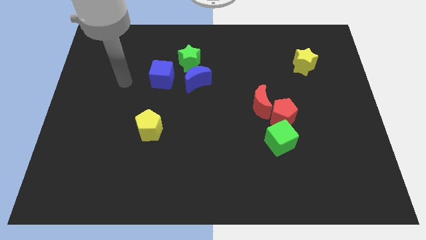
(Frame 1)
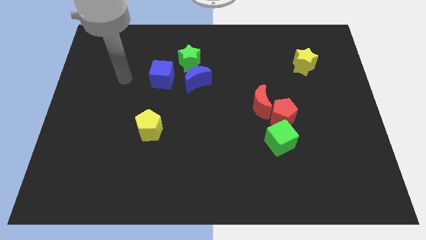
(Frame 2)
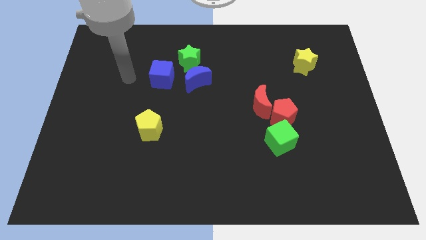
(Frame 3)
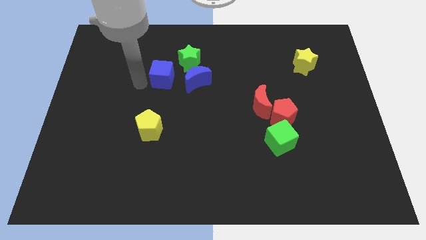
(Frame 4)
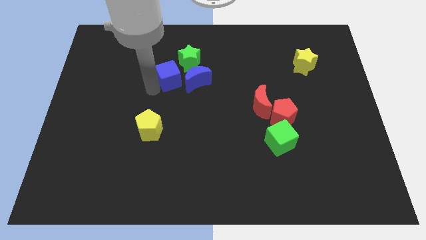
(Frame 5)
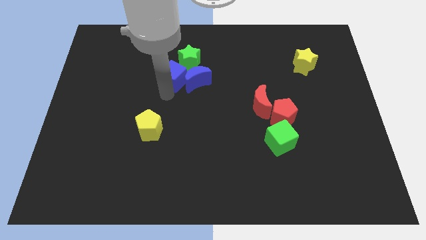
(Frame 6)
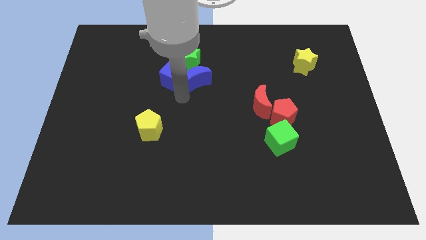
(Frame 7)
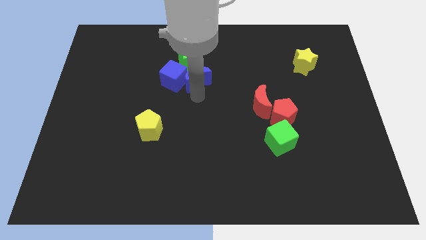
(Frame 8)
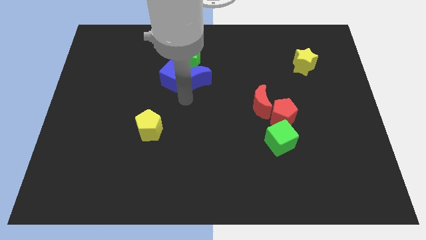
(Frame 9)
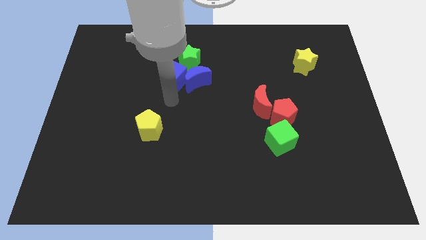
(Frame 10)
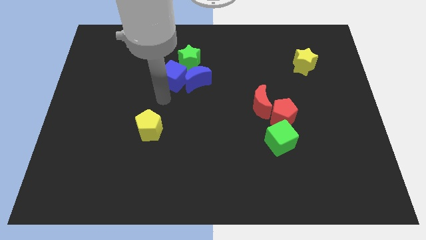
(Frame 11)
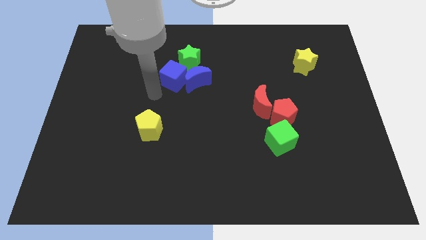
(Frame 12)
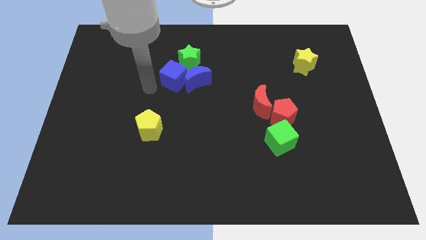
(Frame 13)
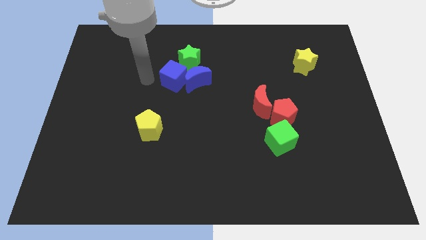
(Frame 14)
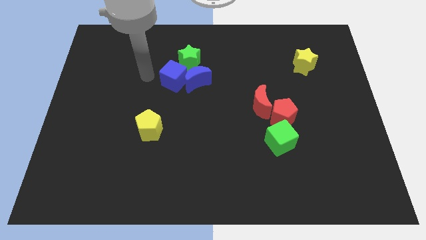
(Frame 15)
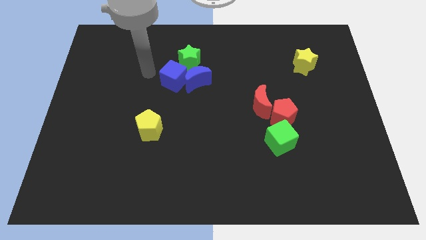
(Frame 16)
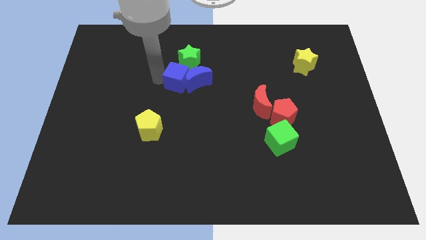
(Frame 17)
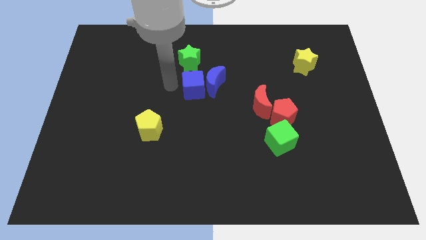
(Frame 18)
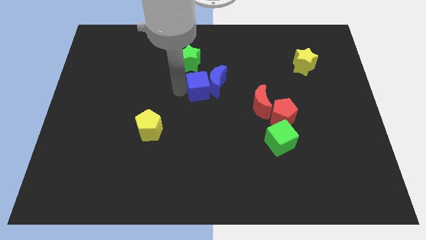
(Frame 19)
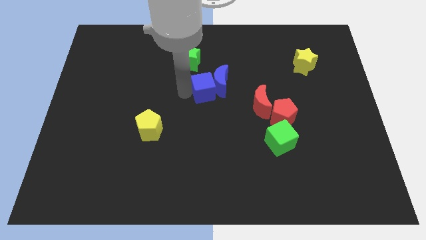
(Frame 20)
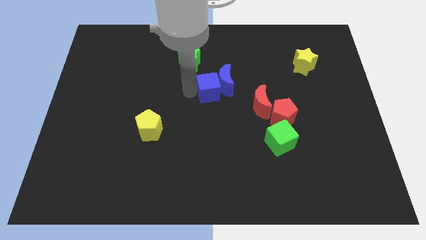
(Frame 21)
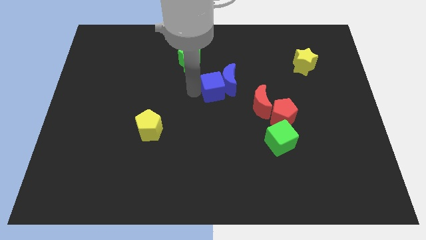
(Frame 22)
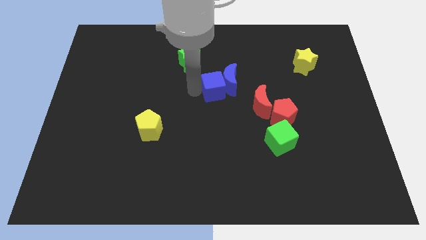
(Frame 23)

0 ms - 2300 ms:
move blue cube middle of the board

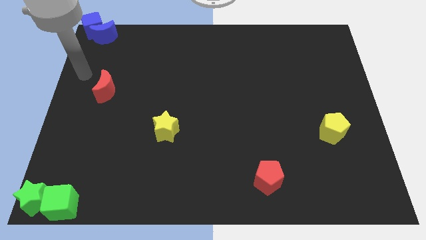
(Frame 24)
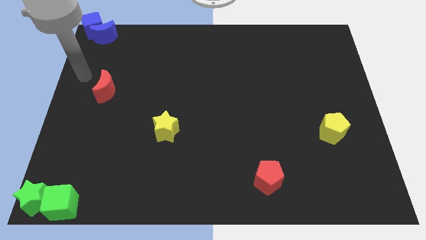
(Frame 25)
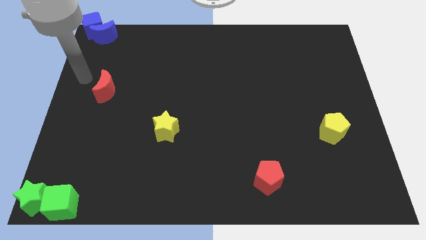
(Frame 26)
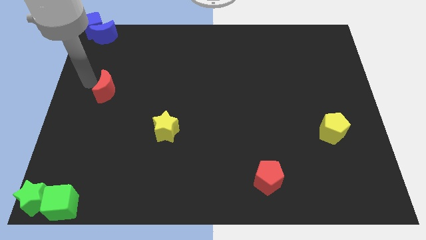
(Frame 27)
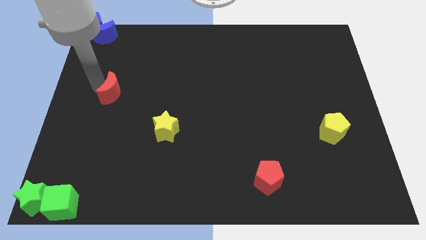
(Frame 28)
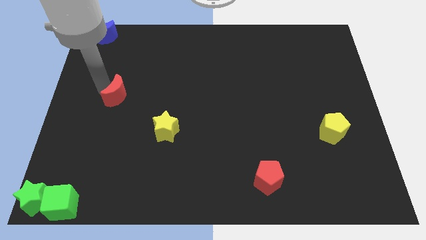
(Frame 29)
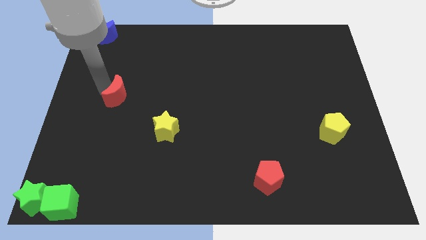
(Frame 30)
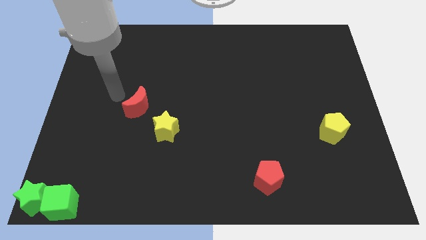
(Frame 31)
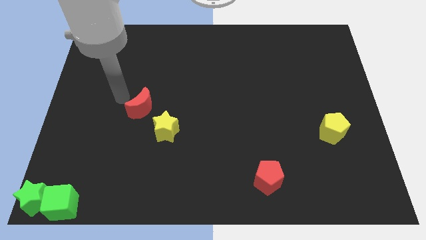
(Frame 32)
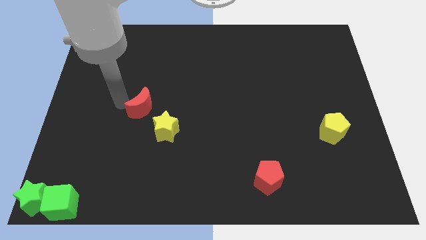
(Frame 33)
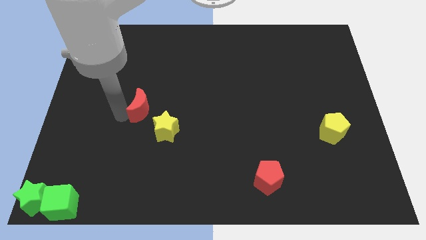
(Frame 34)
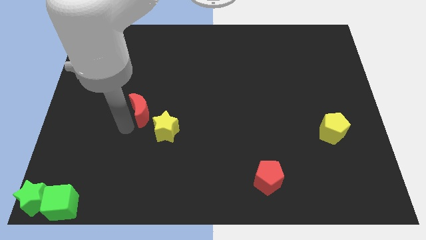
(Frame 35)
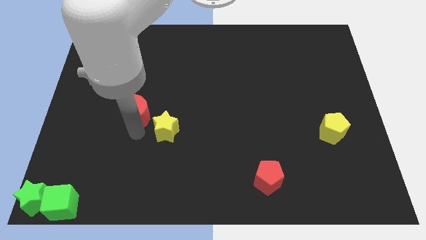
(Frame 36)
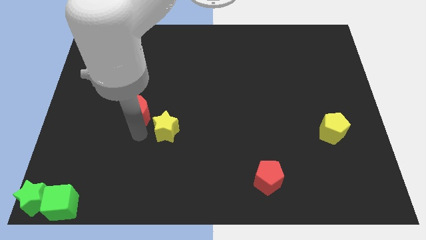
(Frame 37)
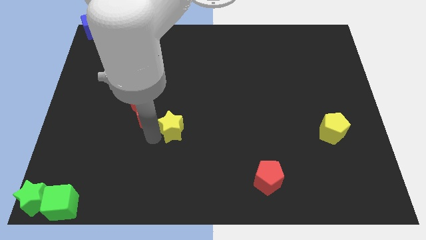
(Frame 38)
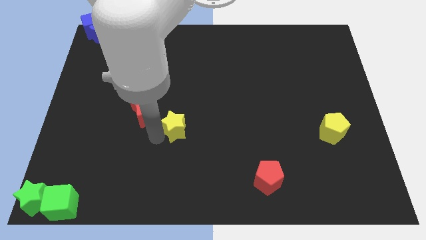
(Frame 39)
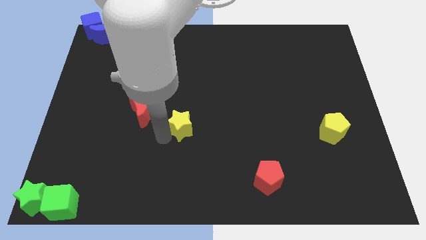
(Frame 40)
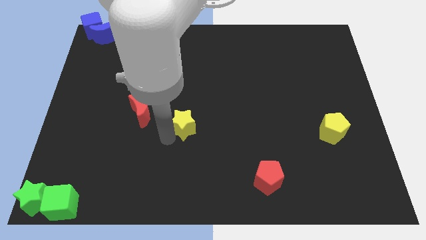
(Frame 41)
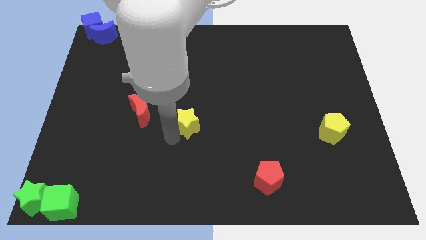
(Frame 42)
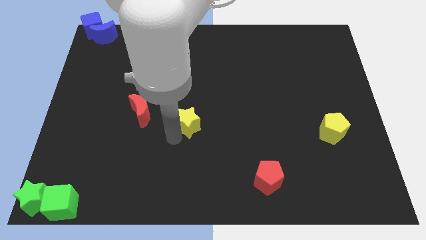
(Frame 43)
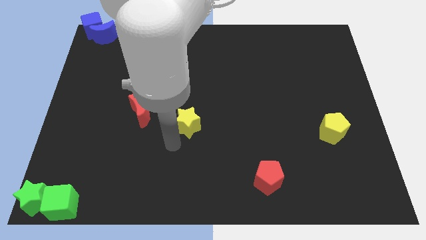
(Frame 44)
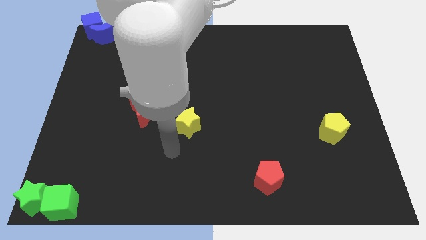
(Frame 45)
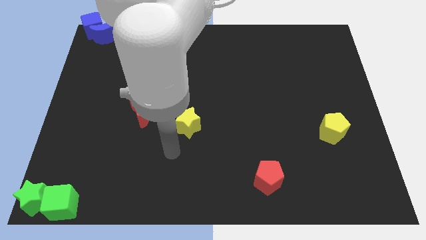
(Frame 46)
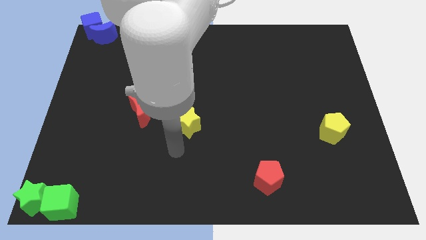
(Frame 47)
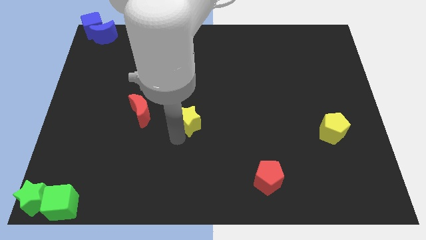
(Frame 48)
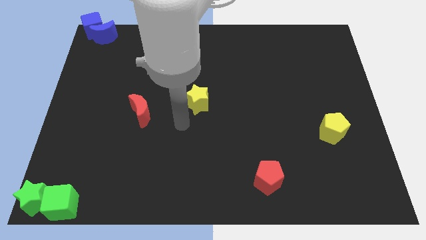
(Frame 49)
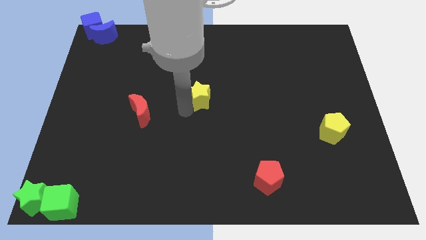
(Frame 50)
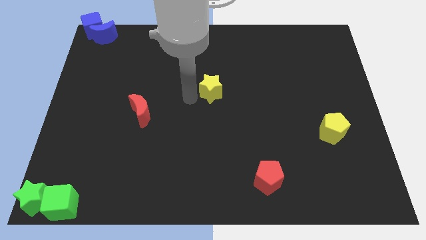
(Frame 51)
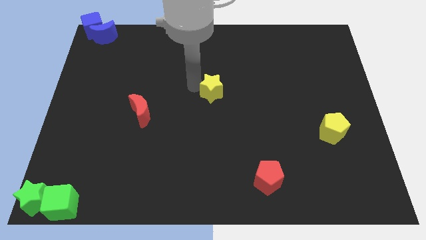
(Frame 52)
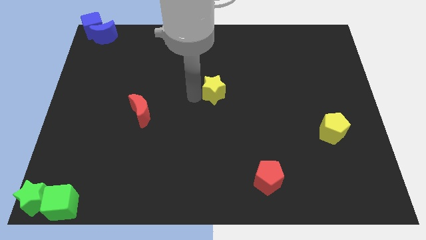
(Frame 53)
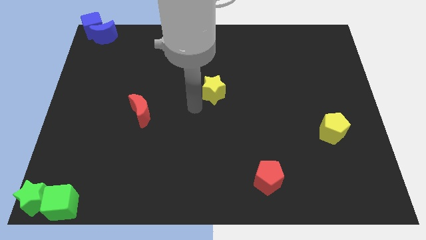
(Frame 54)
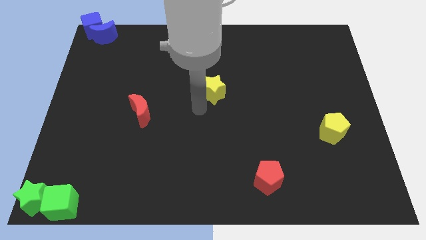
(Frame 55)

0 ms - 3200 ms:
move yellow star at center

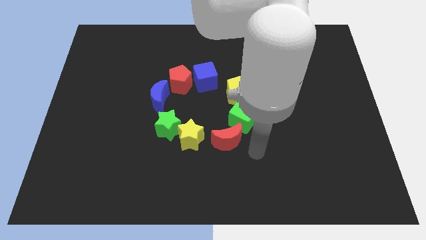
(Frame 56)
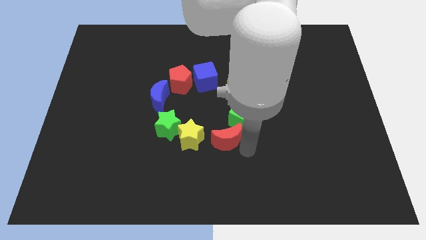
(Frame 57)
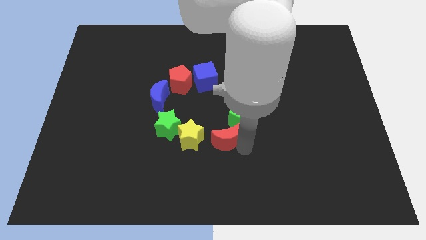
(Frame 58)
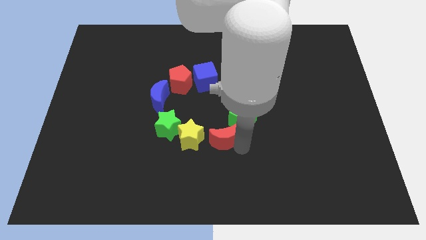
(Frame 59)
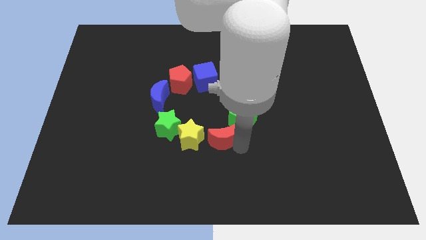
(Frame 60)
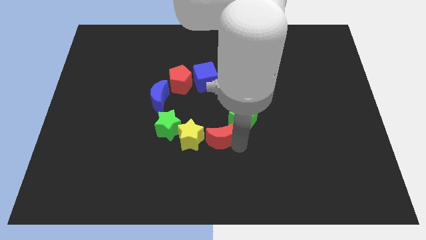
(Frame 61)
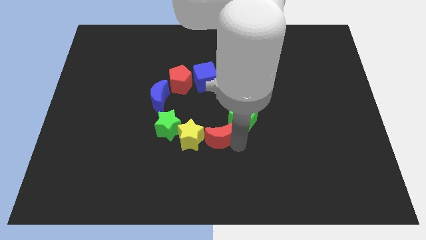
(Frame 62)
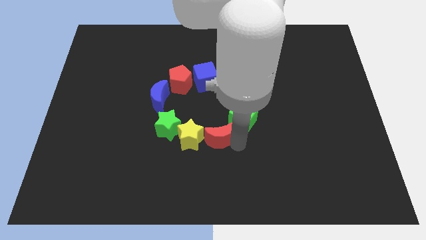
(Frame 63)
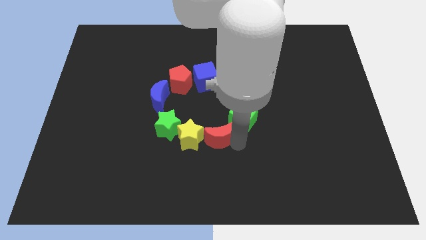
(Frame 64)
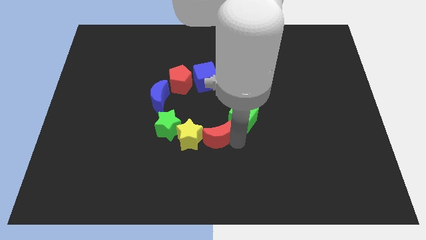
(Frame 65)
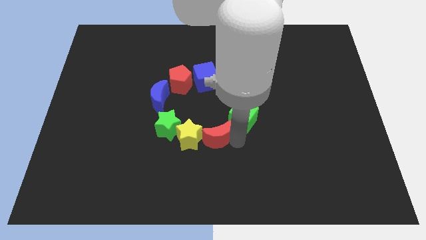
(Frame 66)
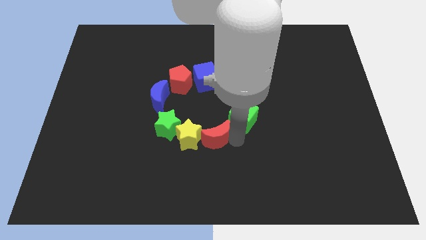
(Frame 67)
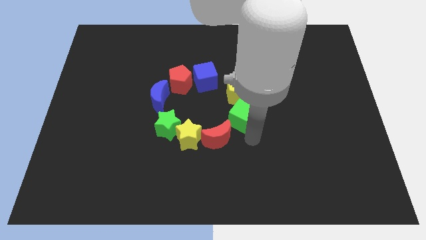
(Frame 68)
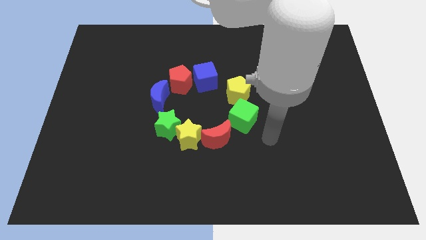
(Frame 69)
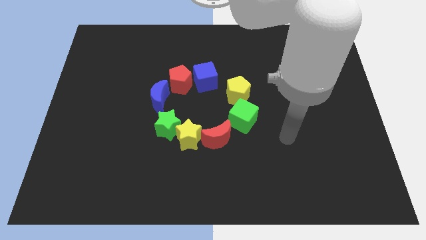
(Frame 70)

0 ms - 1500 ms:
make the red crescent to touch the right side of the yellow star

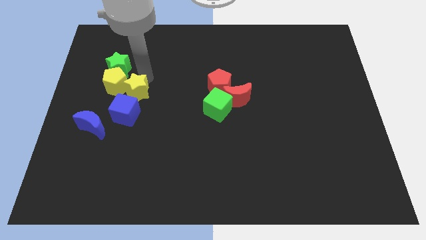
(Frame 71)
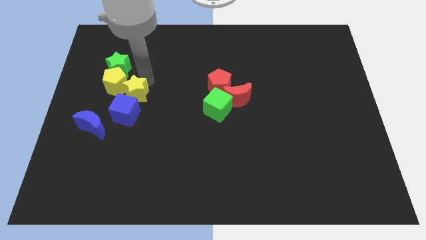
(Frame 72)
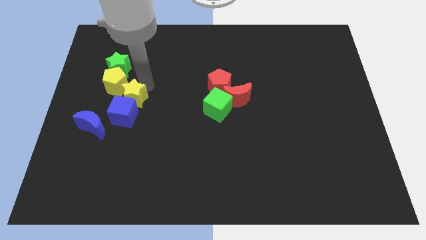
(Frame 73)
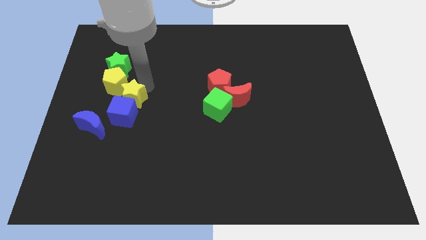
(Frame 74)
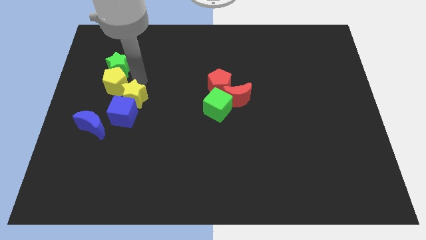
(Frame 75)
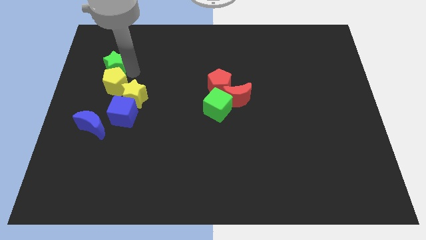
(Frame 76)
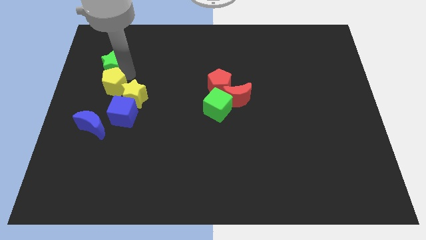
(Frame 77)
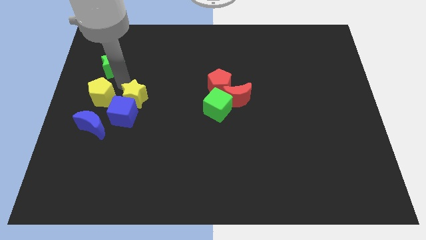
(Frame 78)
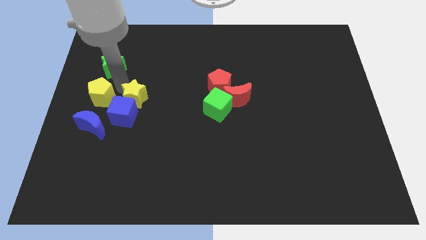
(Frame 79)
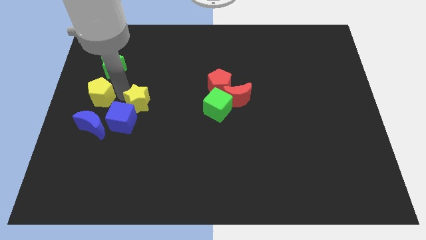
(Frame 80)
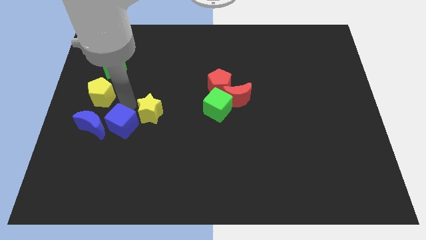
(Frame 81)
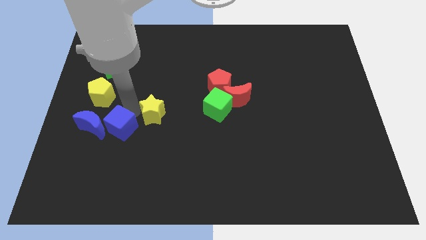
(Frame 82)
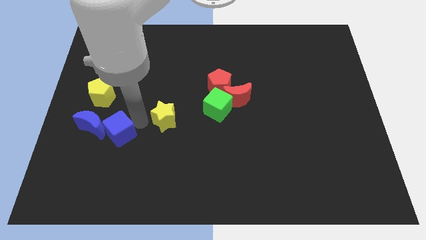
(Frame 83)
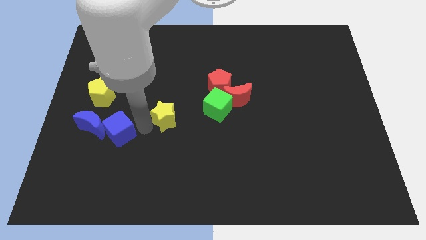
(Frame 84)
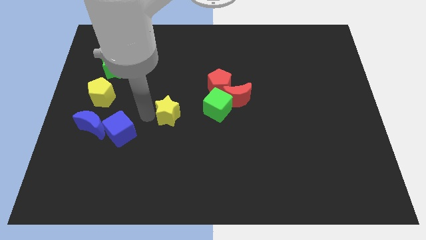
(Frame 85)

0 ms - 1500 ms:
separate the yellow pentagon and the yellow star

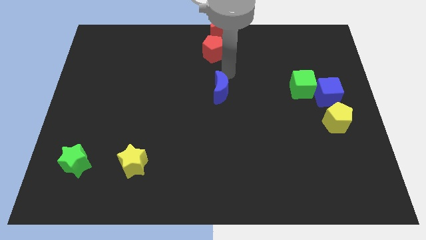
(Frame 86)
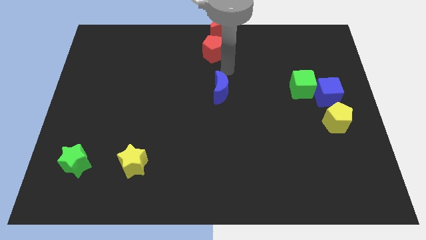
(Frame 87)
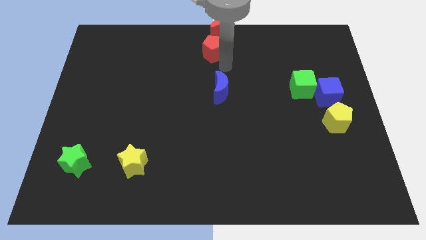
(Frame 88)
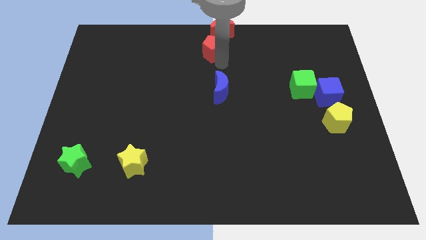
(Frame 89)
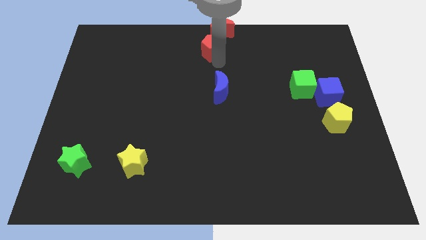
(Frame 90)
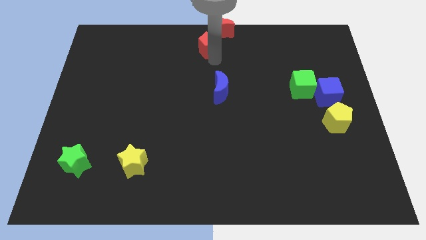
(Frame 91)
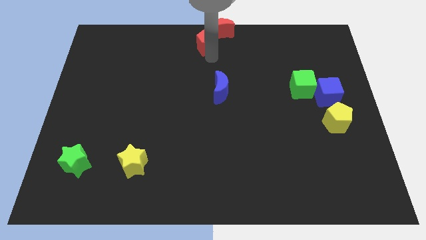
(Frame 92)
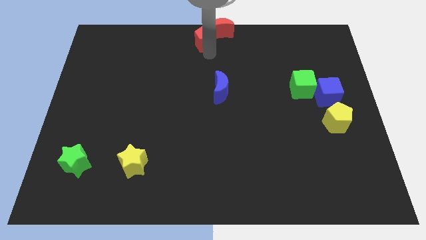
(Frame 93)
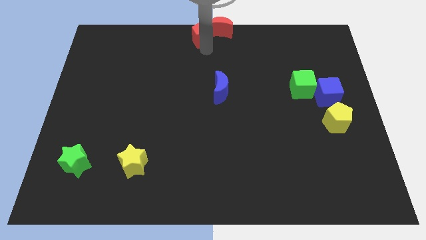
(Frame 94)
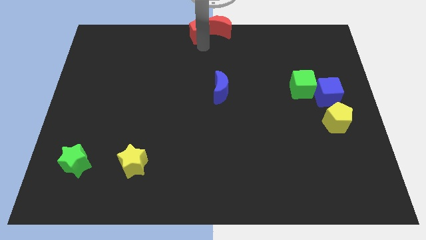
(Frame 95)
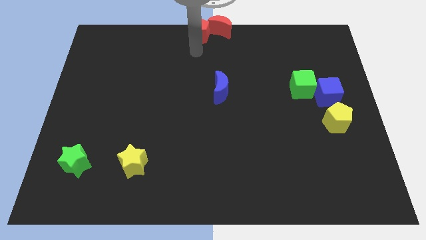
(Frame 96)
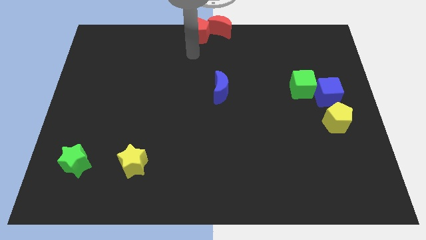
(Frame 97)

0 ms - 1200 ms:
place the red pentagon left to the red moon
